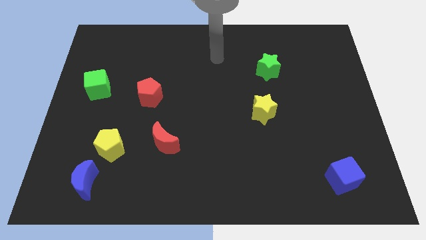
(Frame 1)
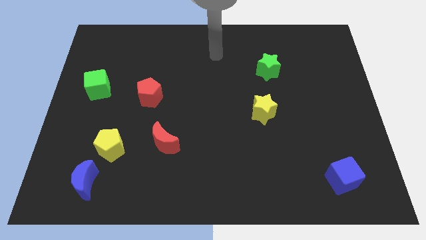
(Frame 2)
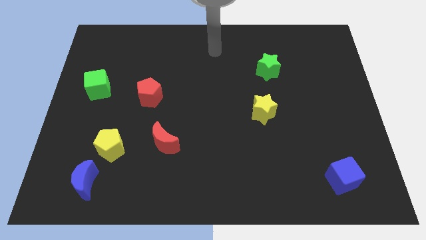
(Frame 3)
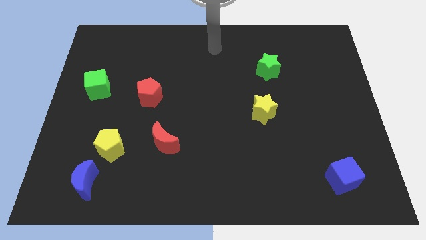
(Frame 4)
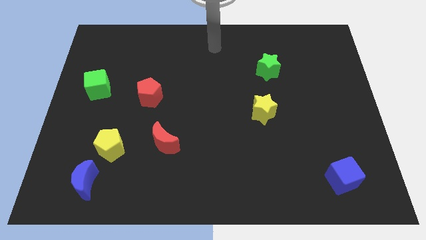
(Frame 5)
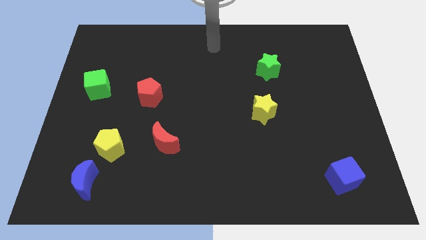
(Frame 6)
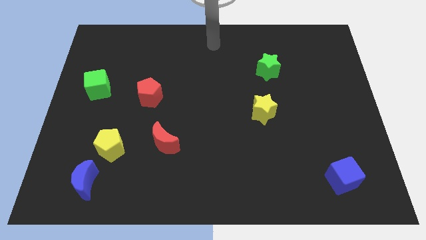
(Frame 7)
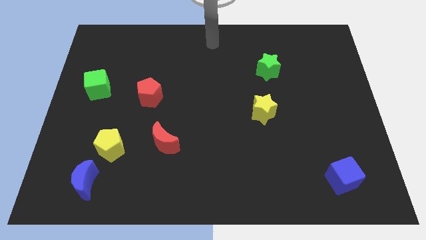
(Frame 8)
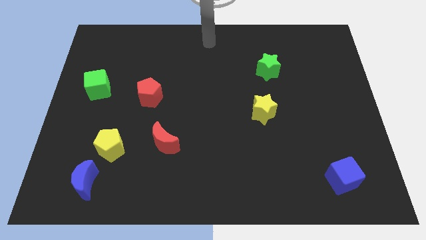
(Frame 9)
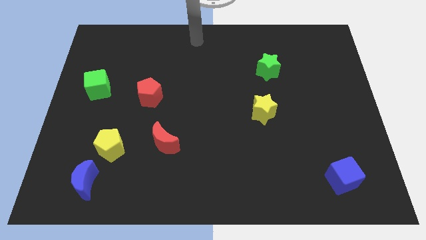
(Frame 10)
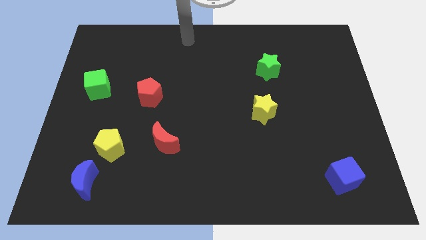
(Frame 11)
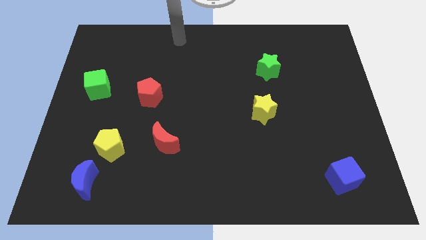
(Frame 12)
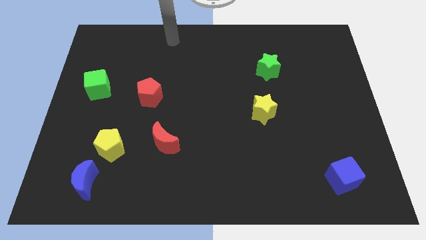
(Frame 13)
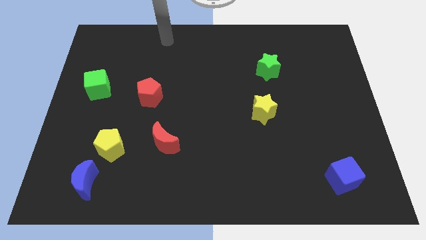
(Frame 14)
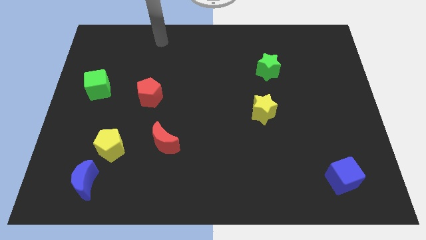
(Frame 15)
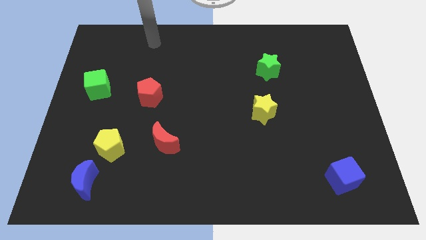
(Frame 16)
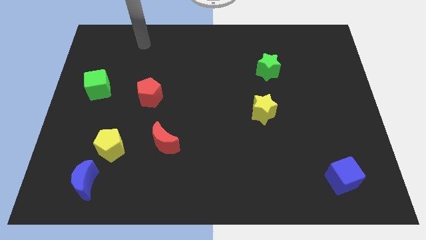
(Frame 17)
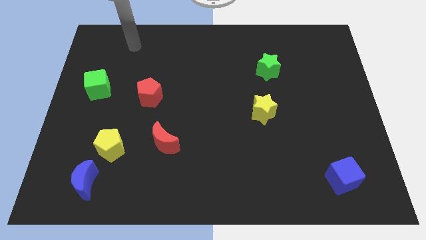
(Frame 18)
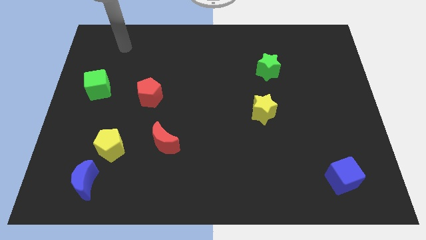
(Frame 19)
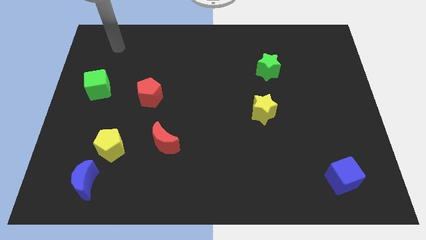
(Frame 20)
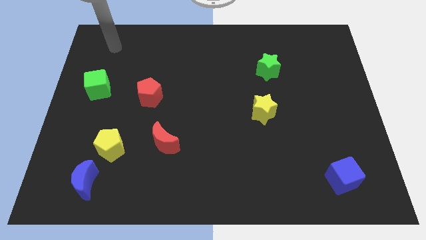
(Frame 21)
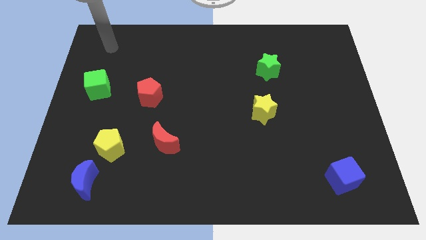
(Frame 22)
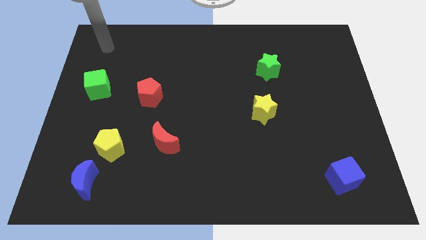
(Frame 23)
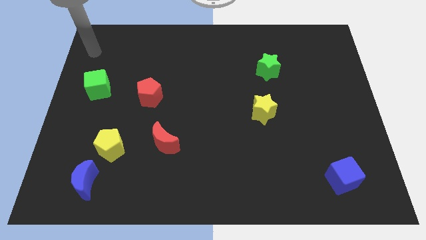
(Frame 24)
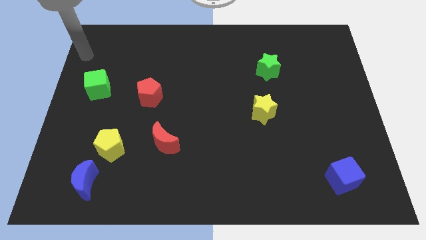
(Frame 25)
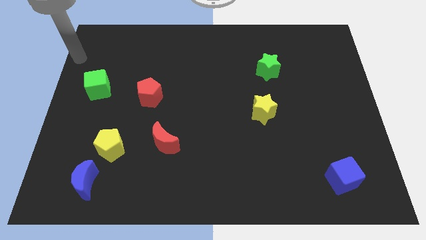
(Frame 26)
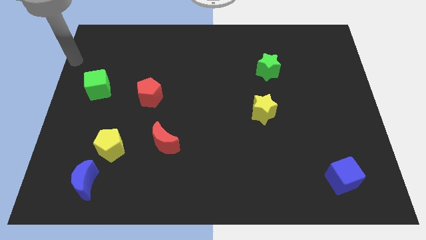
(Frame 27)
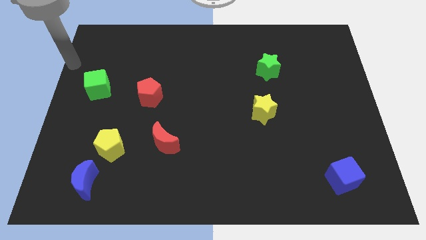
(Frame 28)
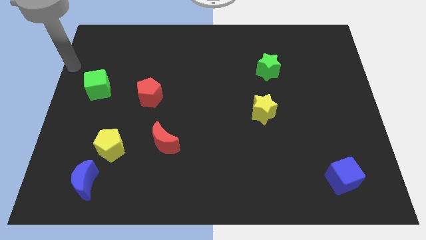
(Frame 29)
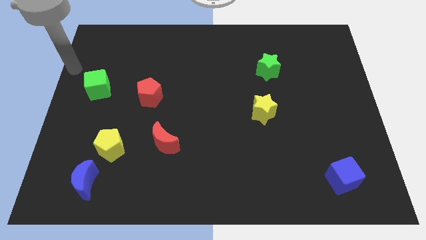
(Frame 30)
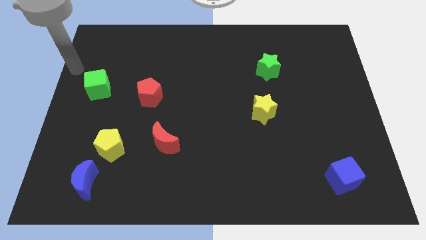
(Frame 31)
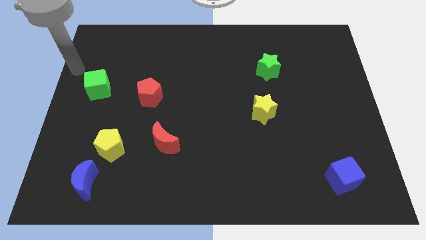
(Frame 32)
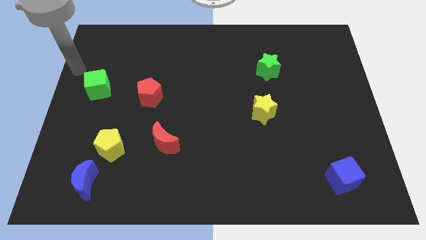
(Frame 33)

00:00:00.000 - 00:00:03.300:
place your arm at the top left of the green cube

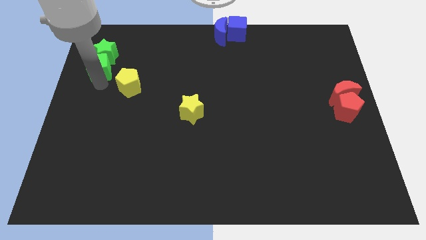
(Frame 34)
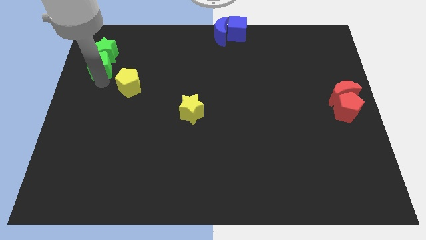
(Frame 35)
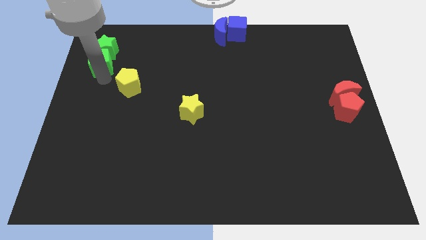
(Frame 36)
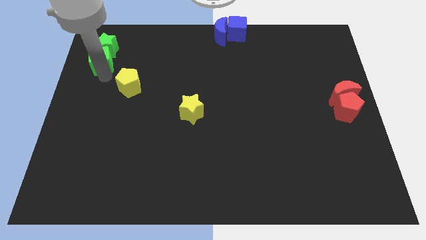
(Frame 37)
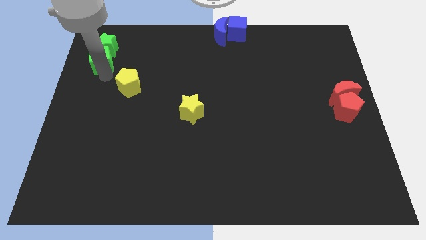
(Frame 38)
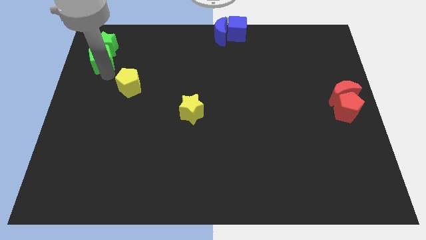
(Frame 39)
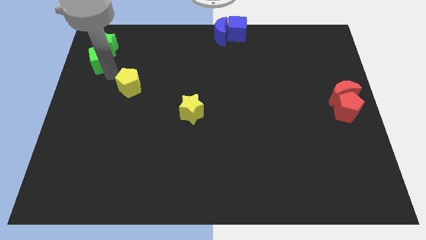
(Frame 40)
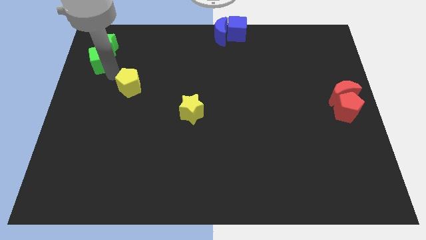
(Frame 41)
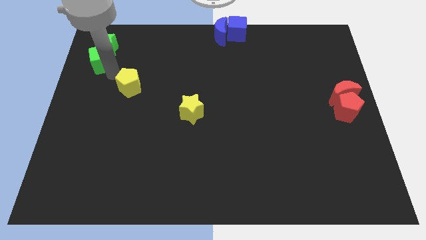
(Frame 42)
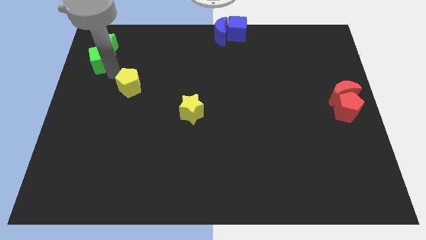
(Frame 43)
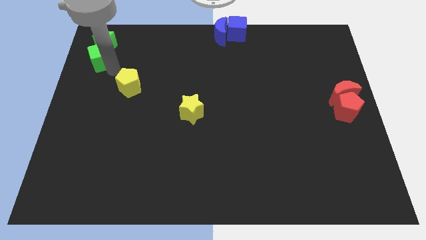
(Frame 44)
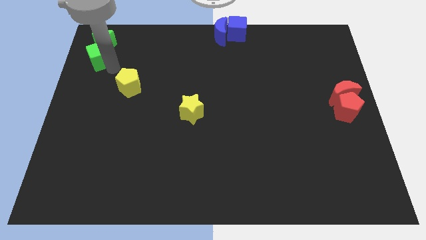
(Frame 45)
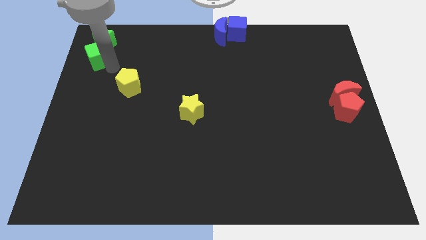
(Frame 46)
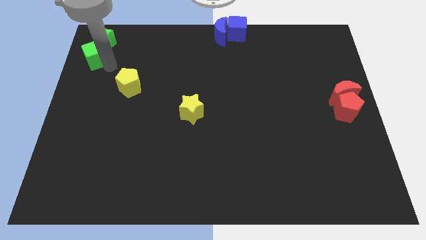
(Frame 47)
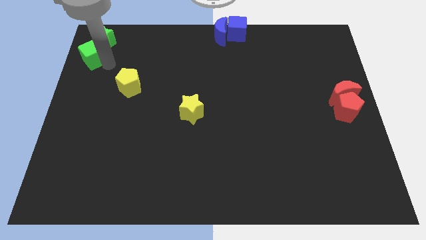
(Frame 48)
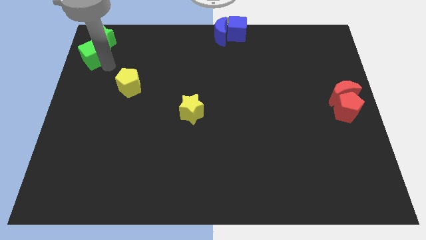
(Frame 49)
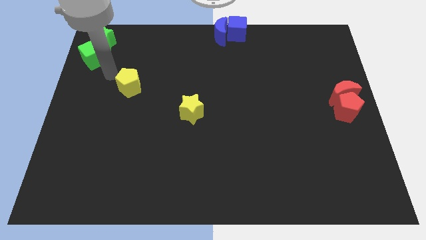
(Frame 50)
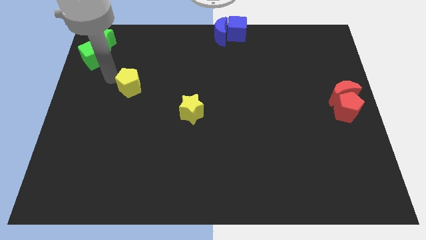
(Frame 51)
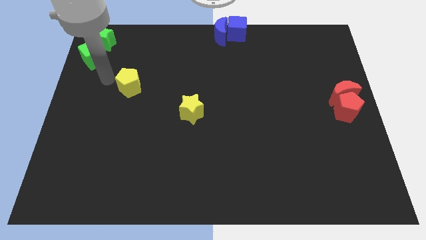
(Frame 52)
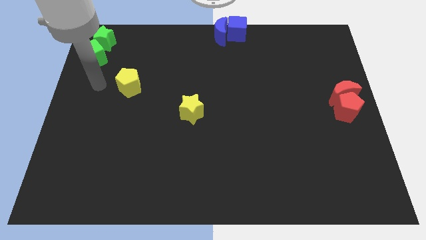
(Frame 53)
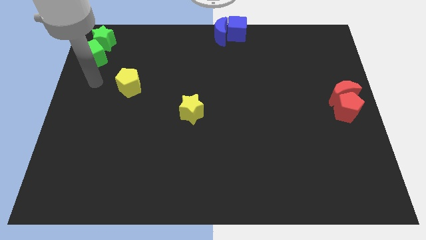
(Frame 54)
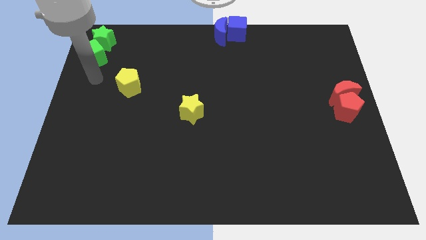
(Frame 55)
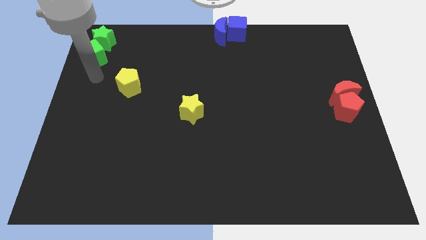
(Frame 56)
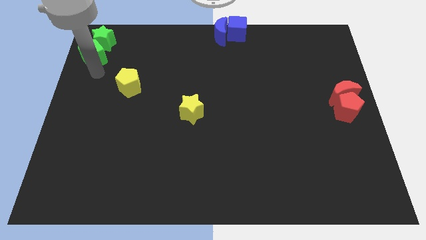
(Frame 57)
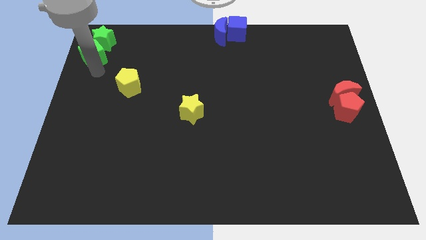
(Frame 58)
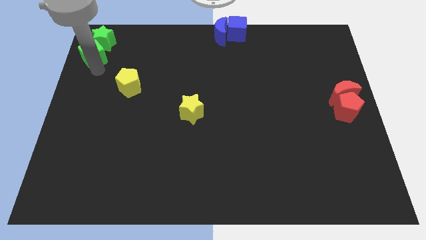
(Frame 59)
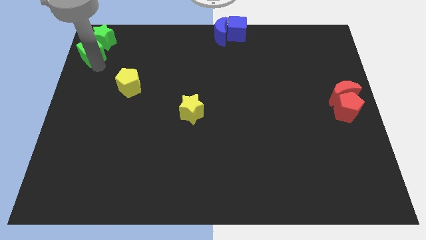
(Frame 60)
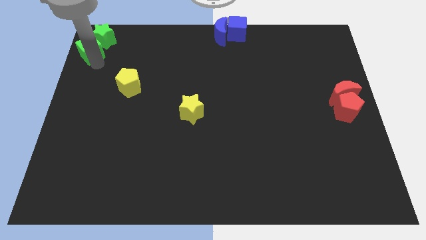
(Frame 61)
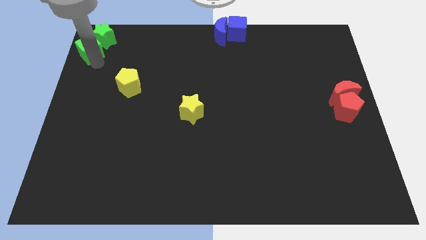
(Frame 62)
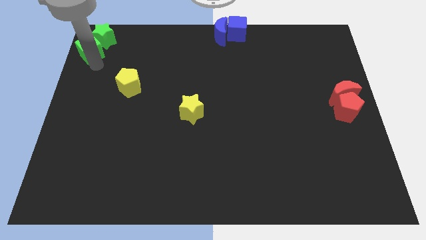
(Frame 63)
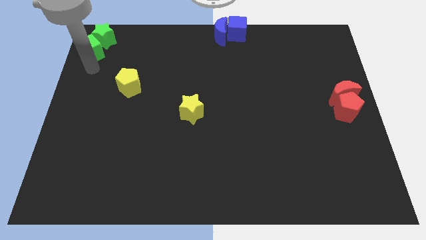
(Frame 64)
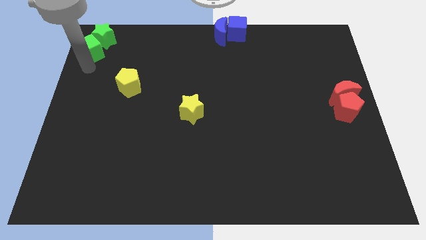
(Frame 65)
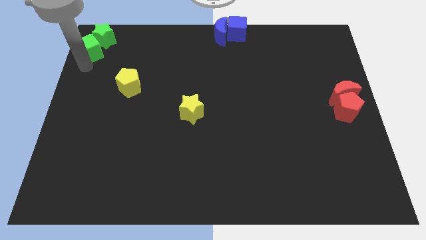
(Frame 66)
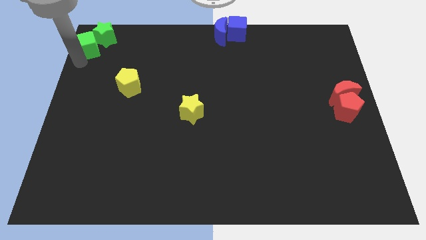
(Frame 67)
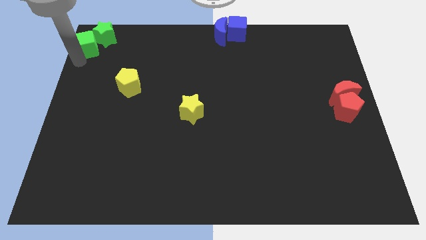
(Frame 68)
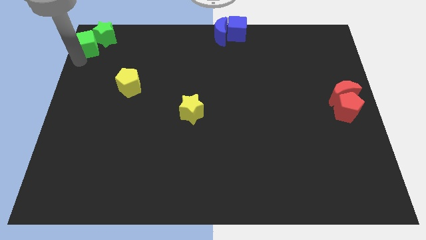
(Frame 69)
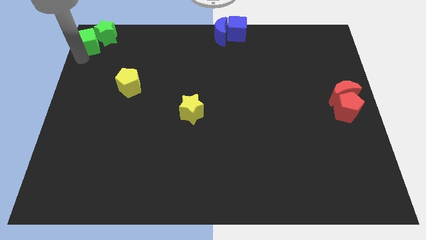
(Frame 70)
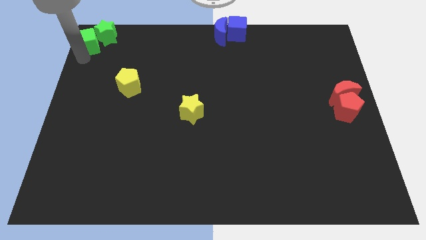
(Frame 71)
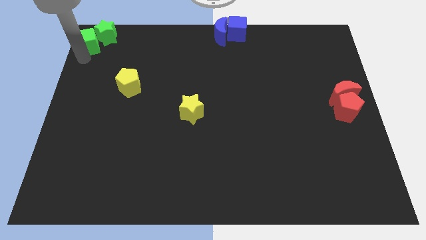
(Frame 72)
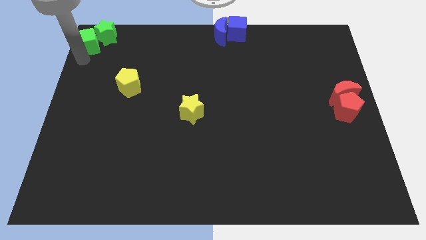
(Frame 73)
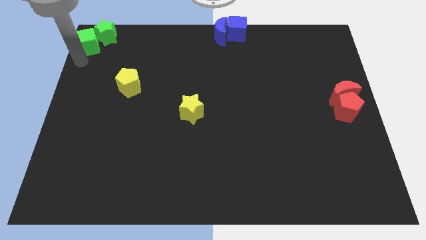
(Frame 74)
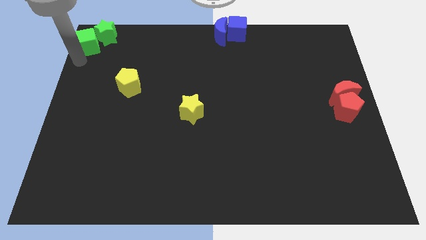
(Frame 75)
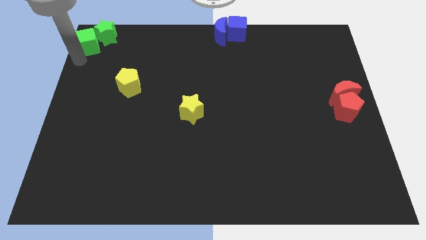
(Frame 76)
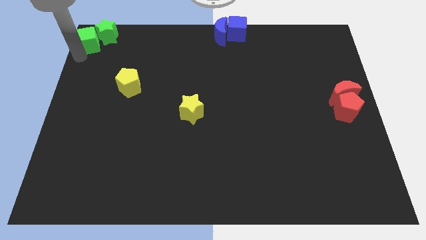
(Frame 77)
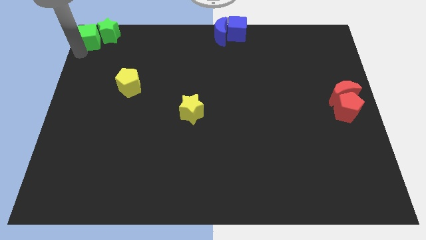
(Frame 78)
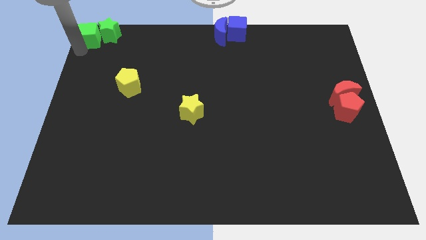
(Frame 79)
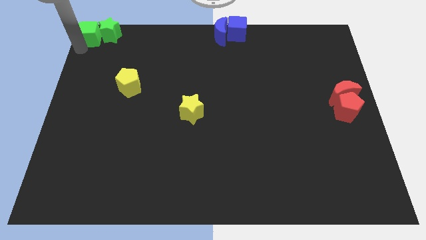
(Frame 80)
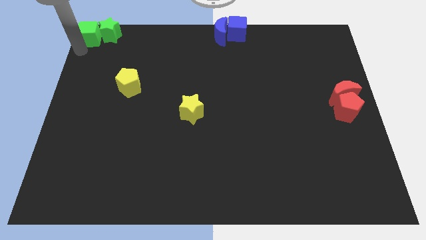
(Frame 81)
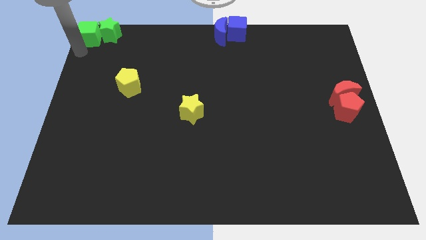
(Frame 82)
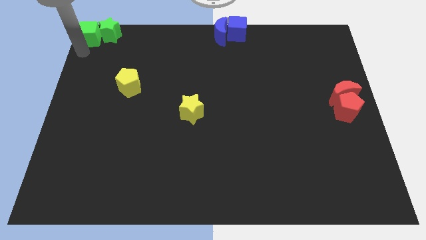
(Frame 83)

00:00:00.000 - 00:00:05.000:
move both the green blocks at the top left corner

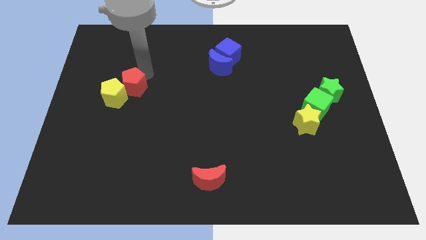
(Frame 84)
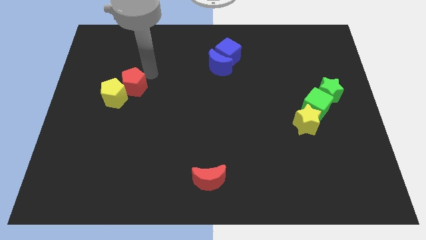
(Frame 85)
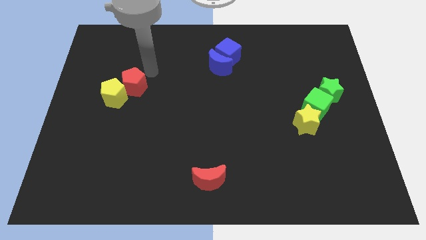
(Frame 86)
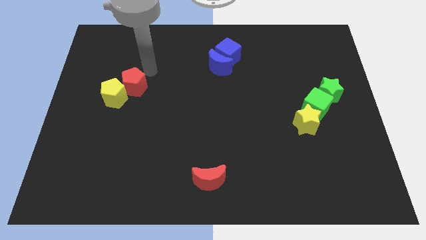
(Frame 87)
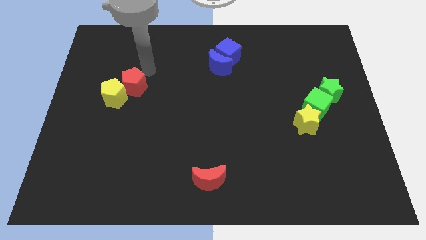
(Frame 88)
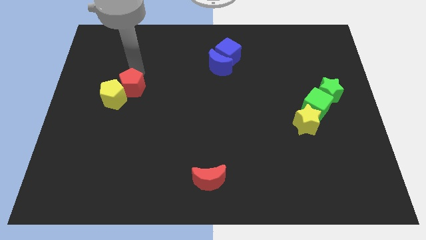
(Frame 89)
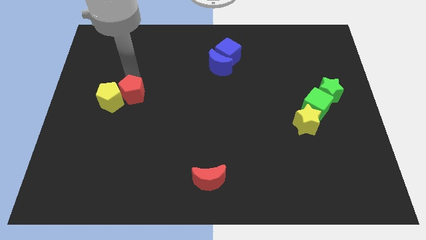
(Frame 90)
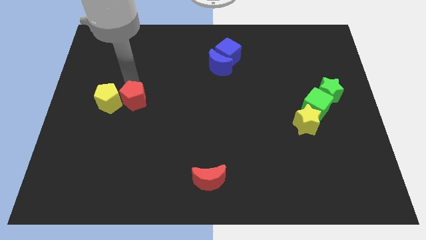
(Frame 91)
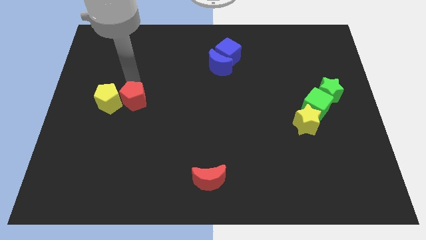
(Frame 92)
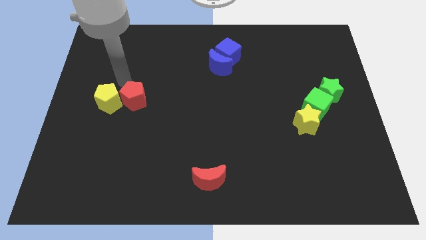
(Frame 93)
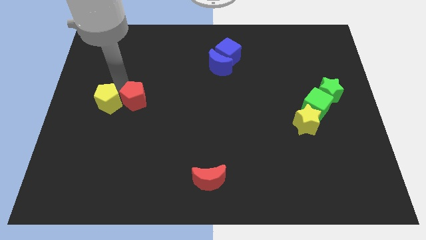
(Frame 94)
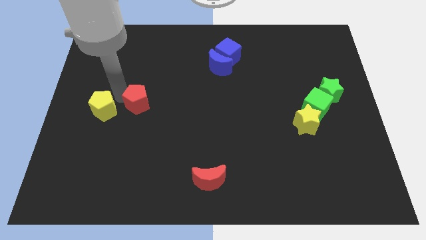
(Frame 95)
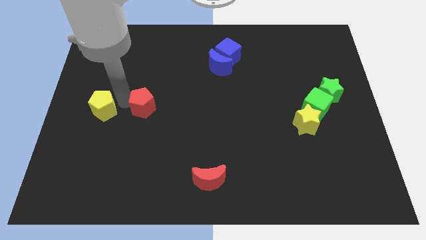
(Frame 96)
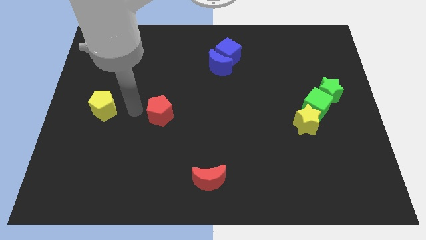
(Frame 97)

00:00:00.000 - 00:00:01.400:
separate red pentagon and yellow pentagon
